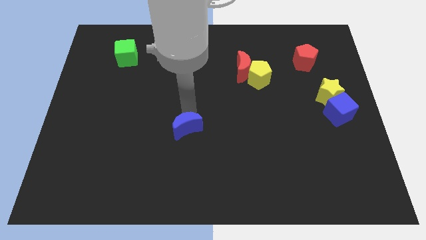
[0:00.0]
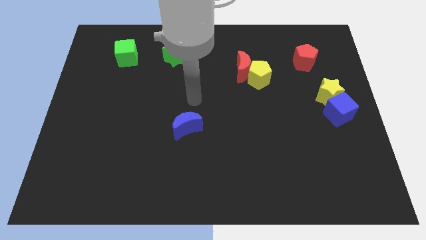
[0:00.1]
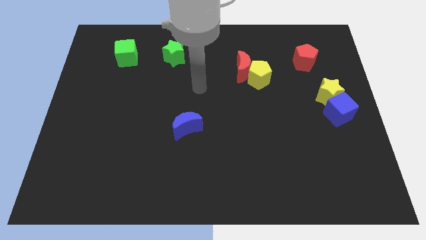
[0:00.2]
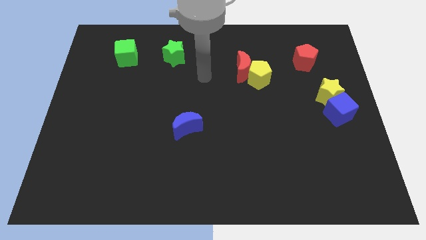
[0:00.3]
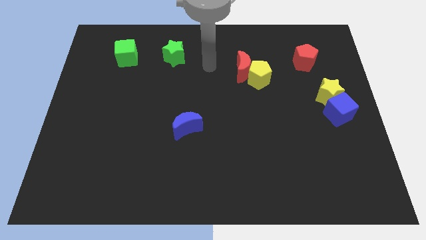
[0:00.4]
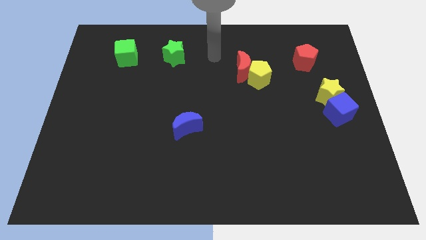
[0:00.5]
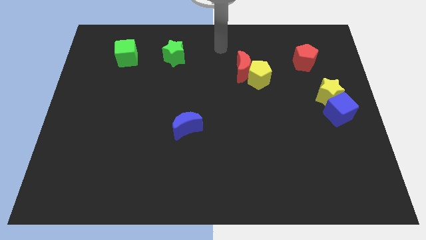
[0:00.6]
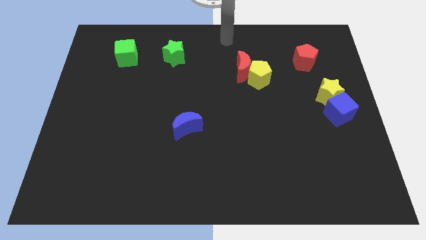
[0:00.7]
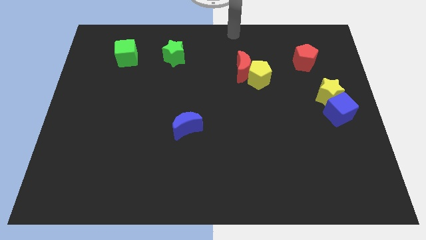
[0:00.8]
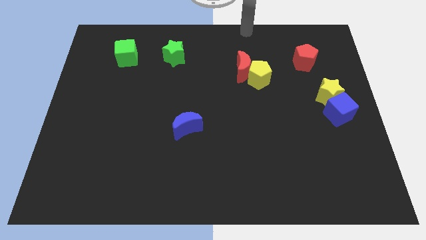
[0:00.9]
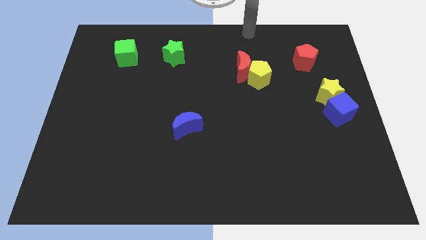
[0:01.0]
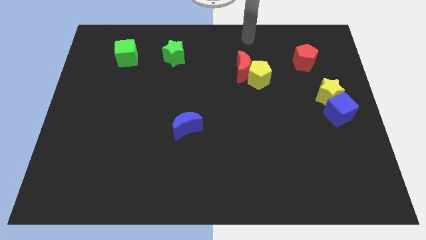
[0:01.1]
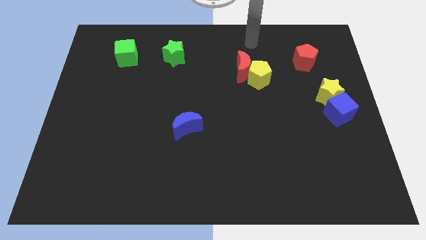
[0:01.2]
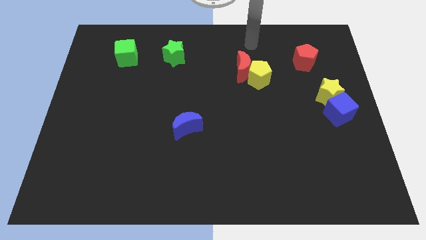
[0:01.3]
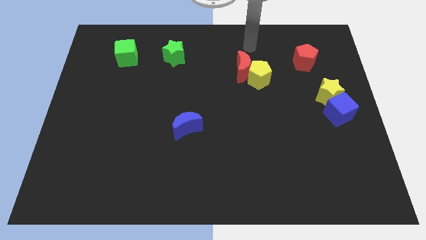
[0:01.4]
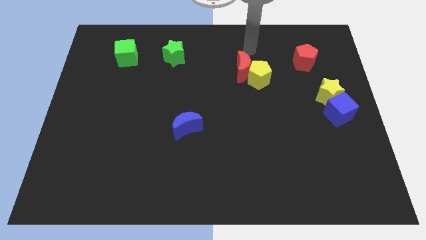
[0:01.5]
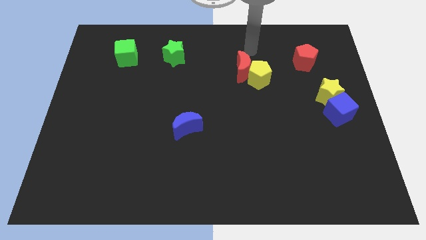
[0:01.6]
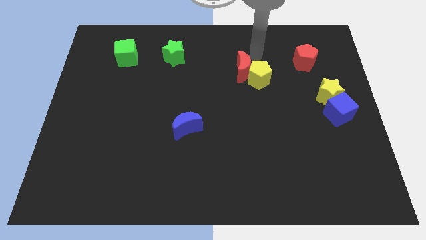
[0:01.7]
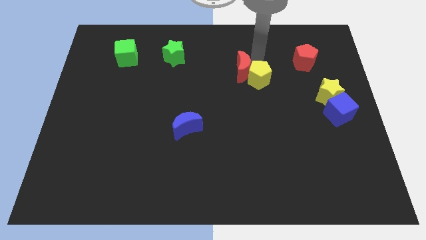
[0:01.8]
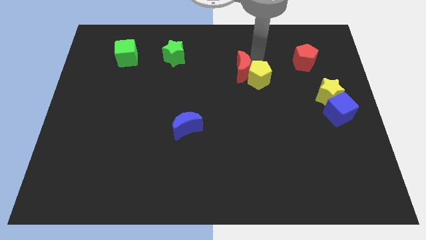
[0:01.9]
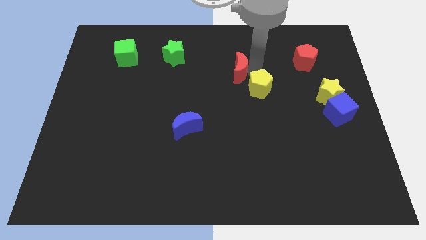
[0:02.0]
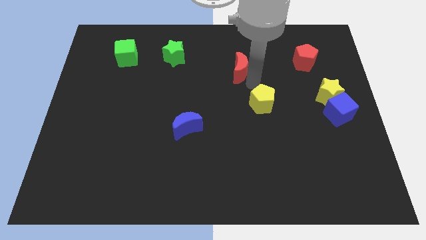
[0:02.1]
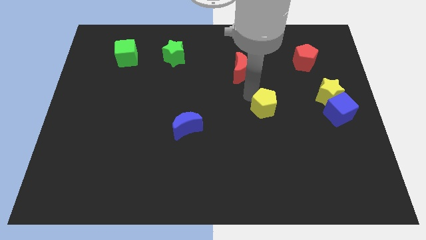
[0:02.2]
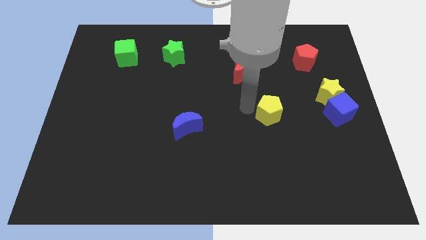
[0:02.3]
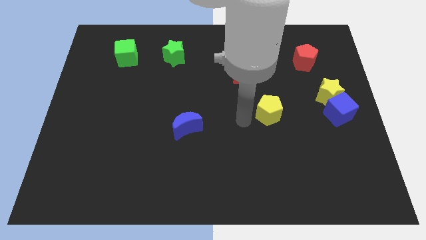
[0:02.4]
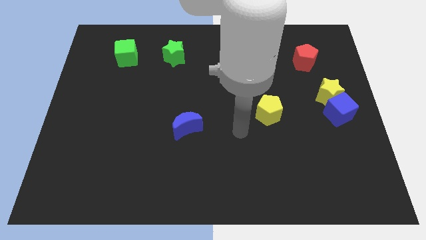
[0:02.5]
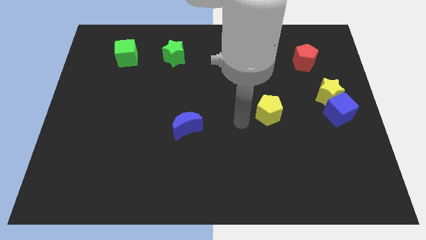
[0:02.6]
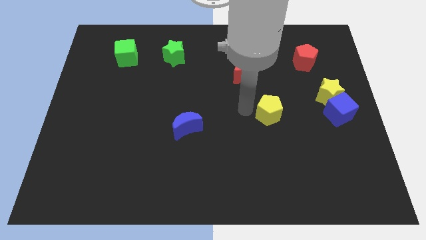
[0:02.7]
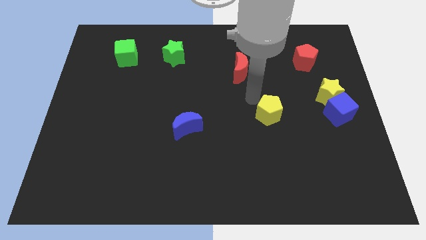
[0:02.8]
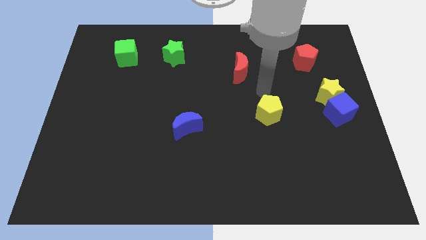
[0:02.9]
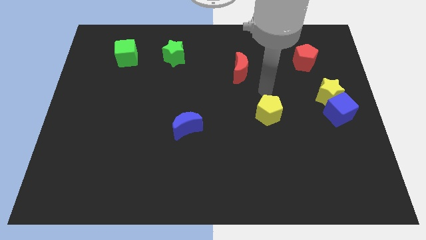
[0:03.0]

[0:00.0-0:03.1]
separate the red moon from the yellow pentagon

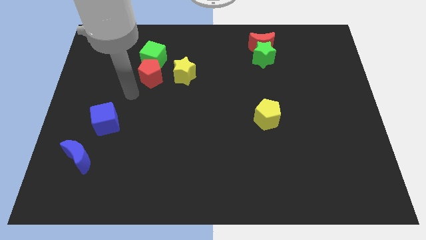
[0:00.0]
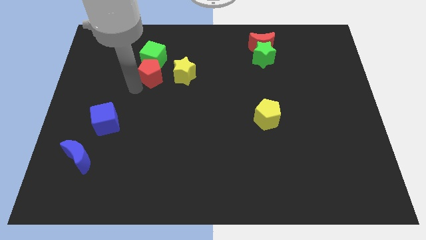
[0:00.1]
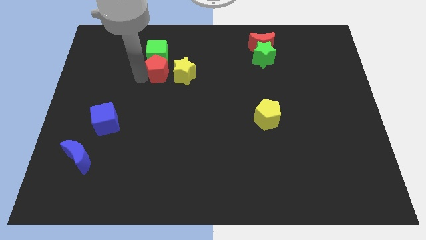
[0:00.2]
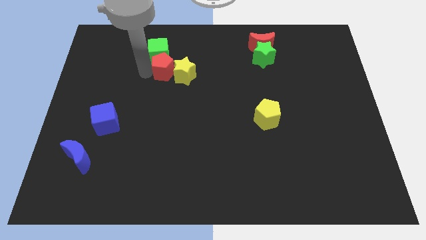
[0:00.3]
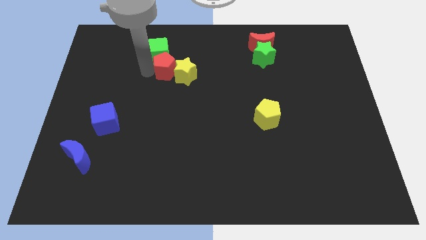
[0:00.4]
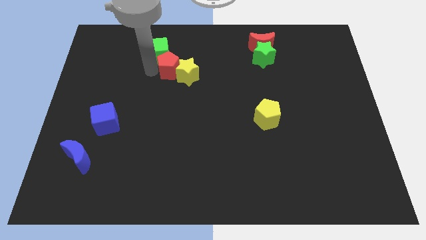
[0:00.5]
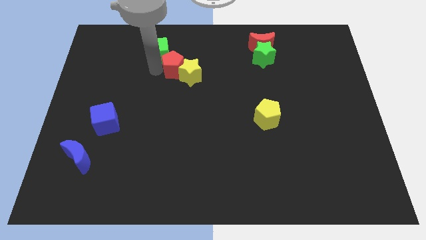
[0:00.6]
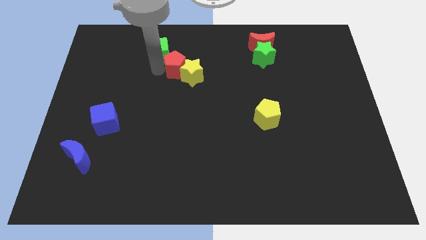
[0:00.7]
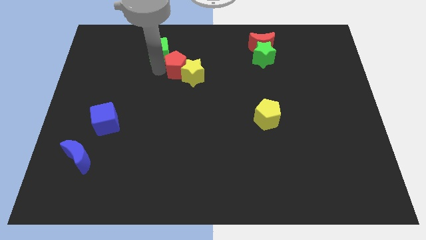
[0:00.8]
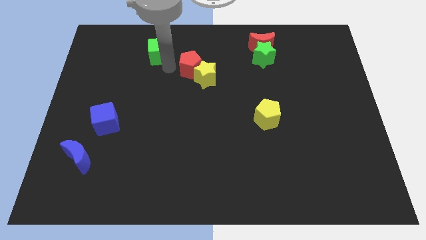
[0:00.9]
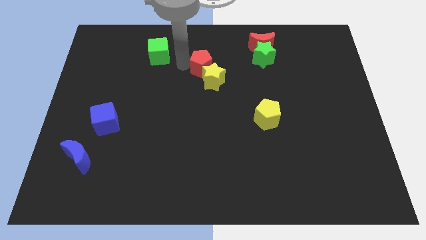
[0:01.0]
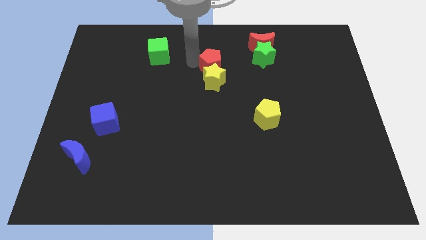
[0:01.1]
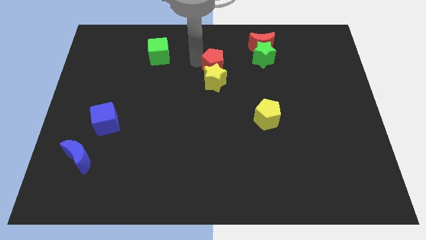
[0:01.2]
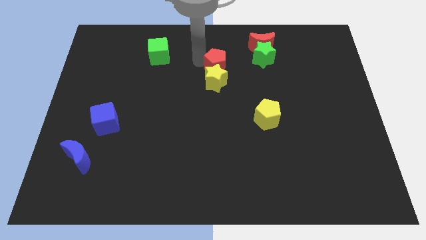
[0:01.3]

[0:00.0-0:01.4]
move red pentagon along with yellow star to the top center

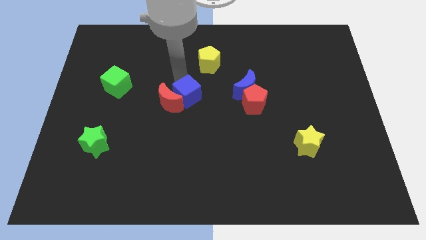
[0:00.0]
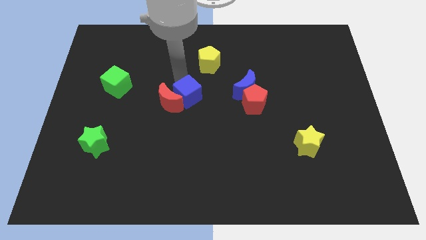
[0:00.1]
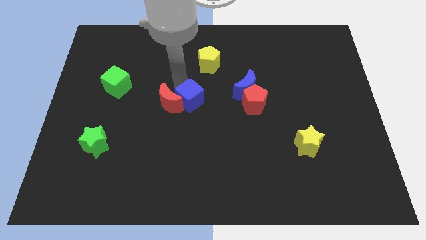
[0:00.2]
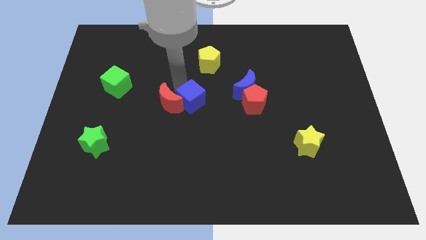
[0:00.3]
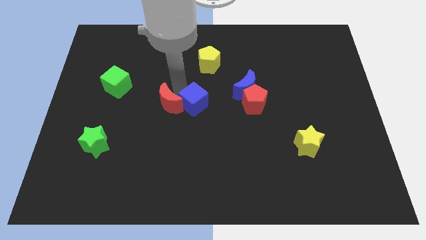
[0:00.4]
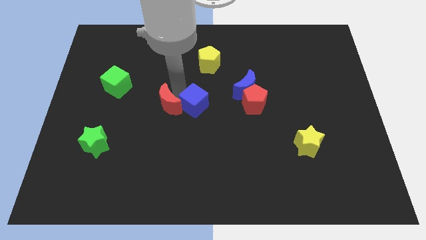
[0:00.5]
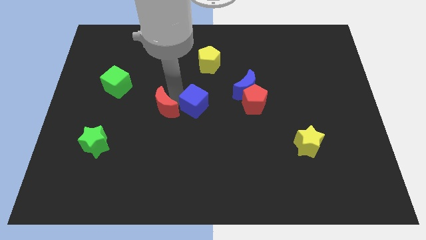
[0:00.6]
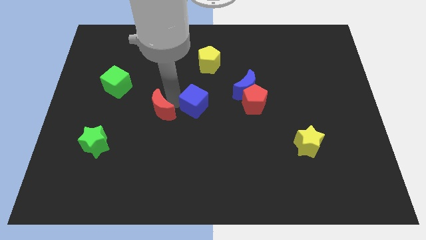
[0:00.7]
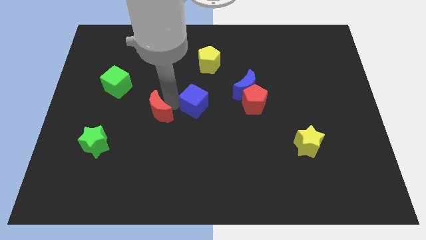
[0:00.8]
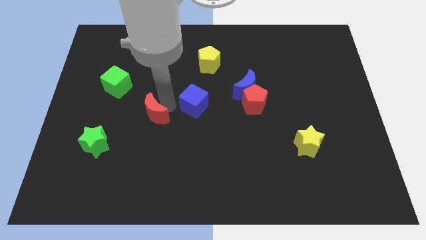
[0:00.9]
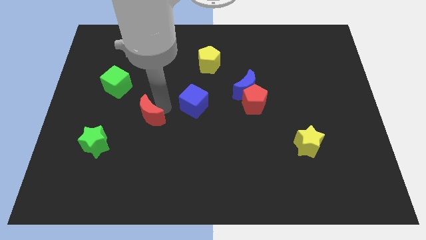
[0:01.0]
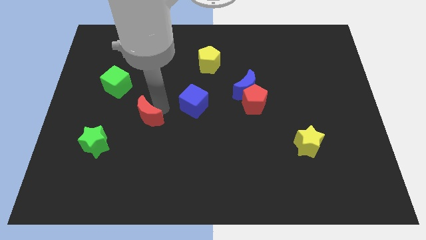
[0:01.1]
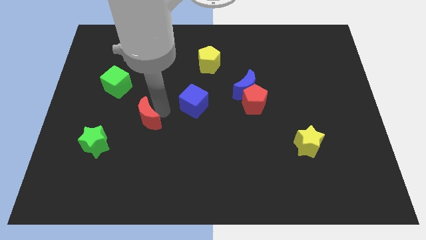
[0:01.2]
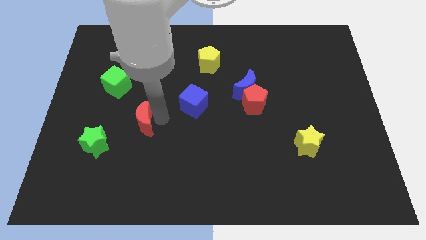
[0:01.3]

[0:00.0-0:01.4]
separate the red crescent from the blue cube

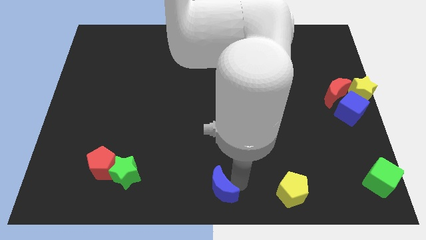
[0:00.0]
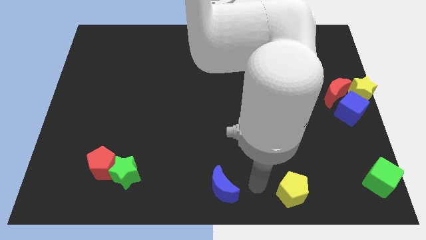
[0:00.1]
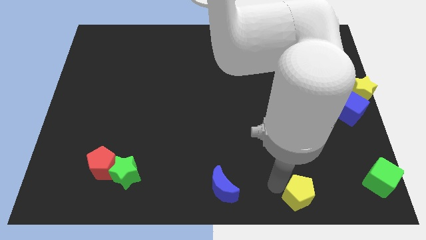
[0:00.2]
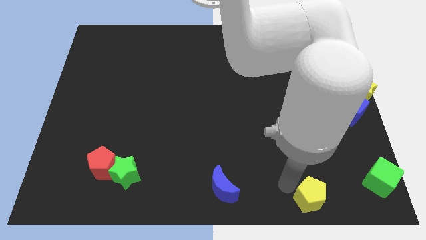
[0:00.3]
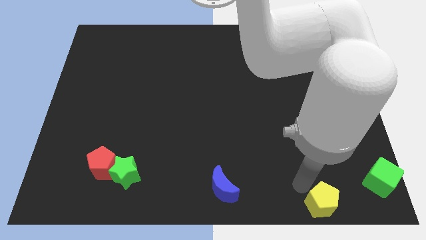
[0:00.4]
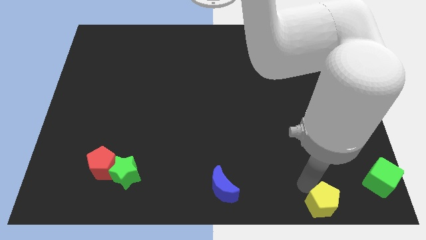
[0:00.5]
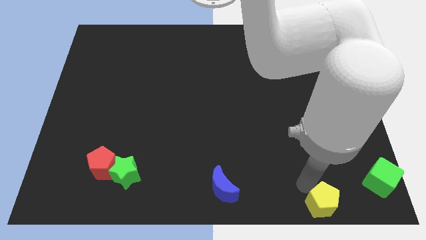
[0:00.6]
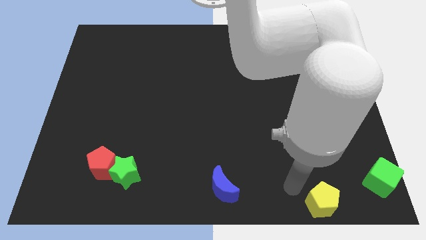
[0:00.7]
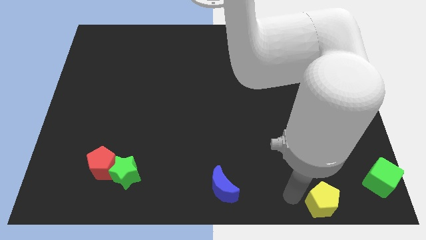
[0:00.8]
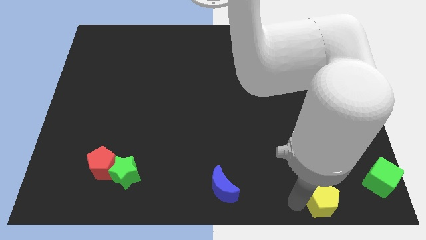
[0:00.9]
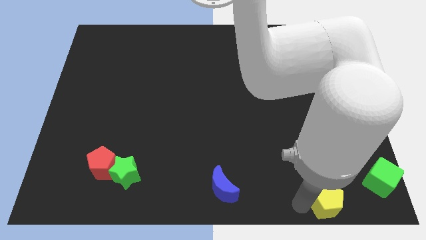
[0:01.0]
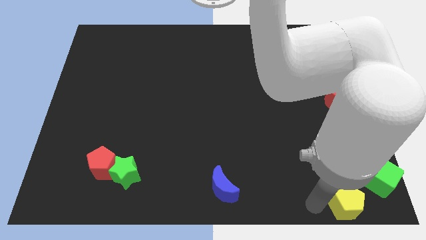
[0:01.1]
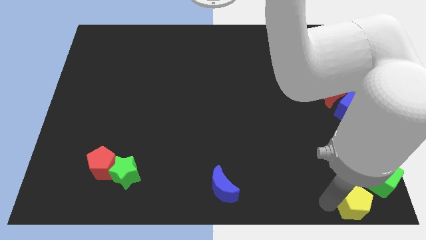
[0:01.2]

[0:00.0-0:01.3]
push the yellow pentagon to the bottom right

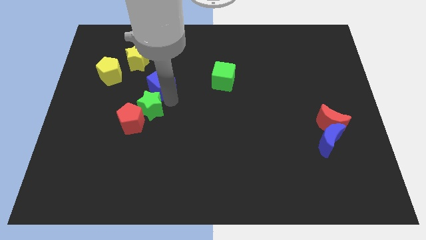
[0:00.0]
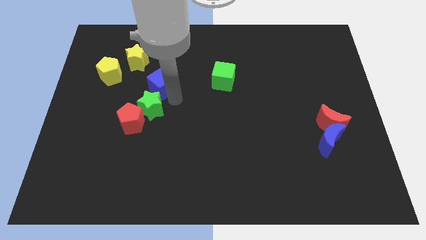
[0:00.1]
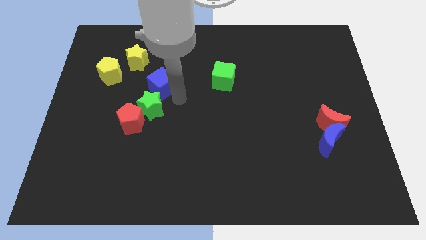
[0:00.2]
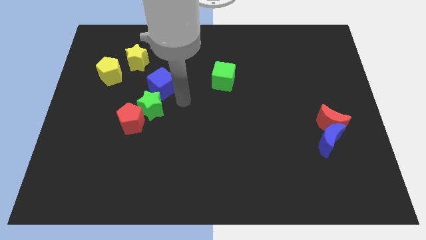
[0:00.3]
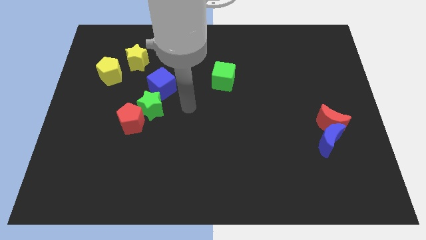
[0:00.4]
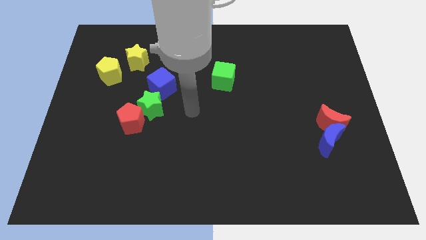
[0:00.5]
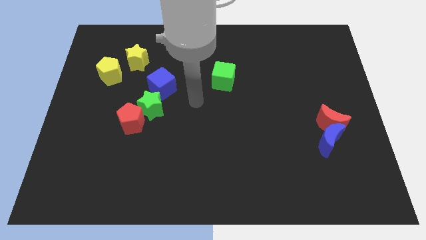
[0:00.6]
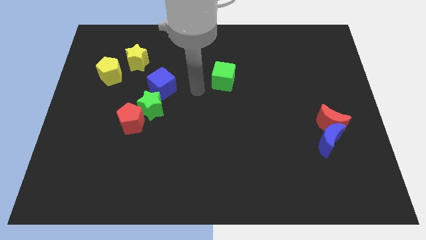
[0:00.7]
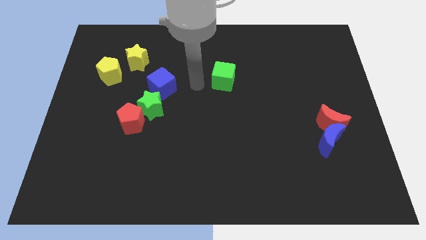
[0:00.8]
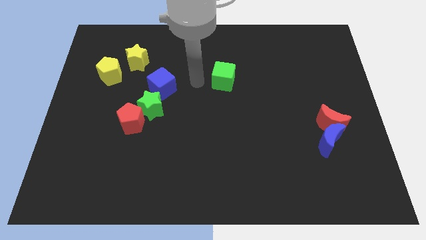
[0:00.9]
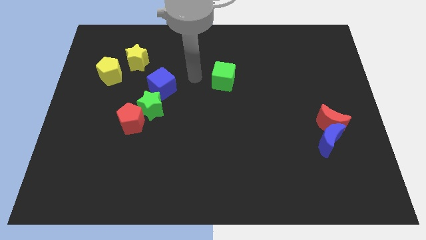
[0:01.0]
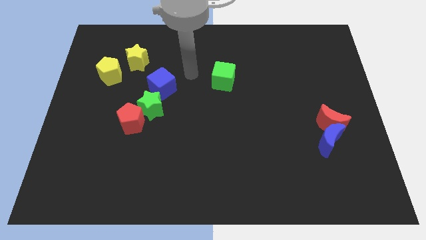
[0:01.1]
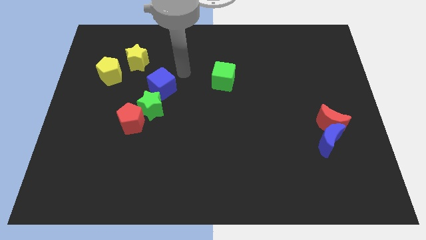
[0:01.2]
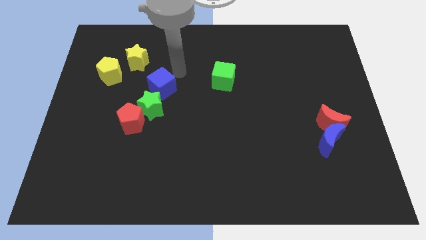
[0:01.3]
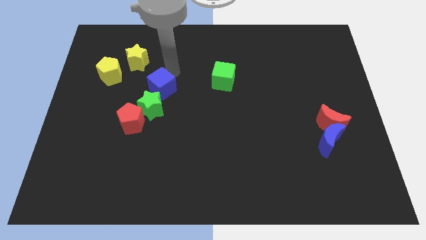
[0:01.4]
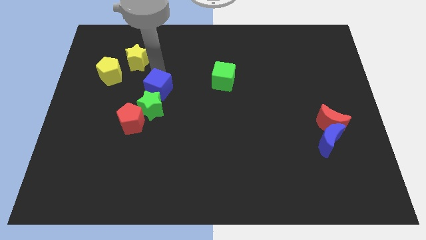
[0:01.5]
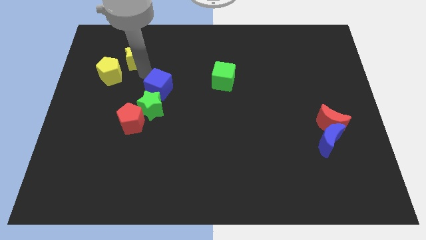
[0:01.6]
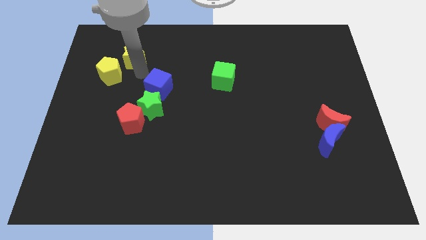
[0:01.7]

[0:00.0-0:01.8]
move your arm to the bottom of yellow star
